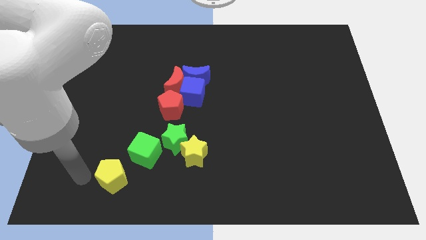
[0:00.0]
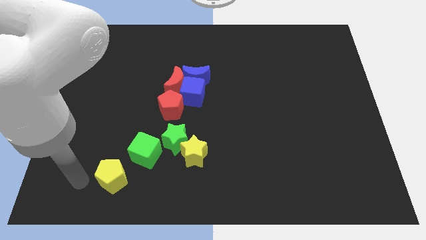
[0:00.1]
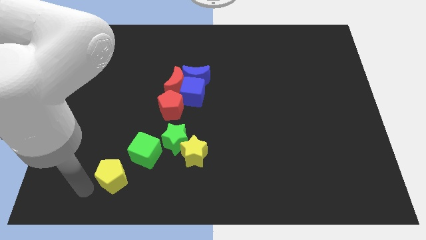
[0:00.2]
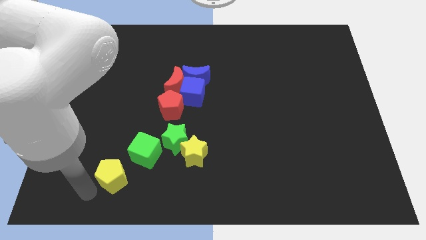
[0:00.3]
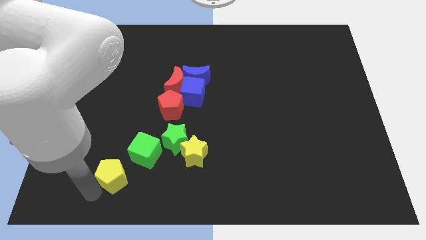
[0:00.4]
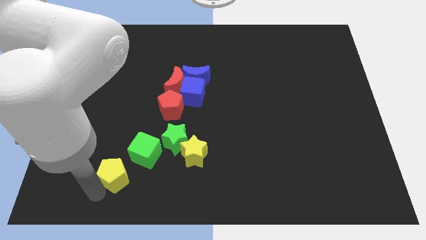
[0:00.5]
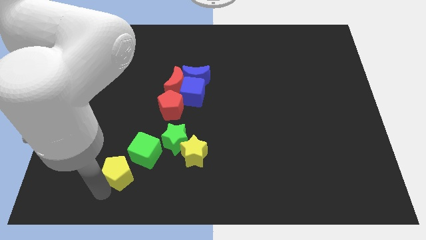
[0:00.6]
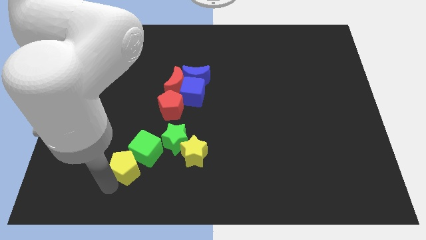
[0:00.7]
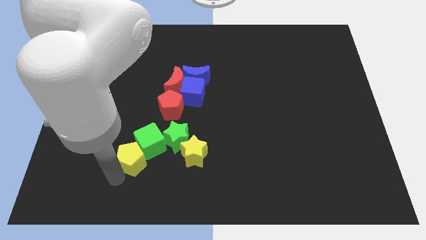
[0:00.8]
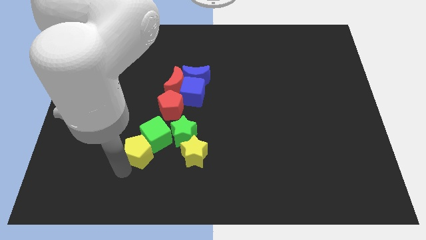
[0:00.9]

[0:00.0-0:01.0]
push the yellow pentagon to the left of the green cube

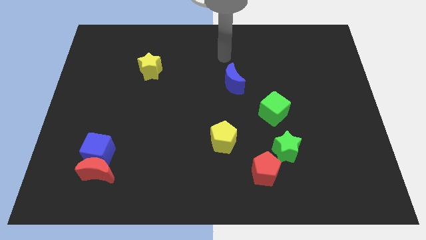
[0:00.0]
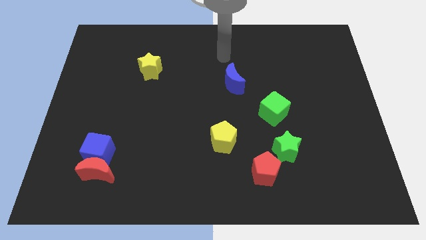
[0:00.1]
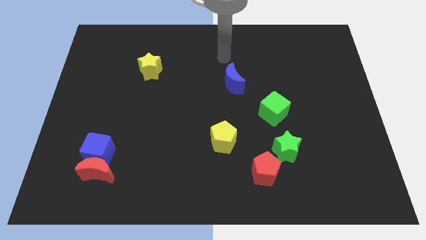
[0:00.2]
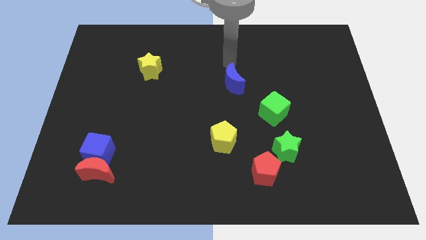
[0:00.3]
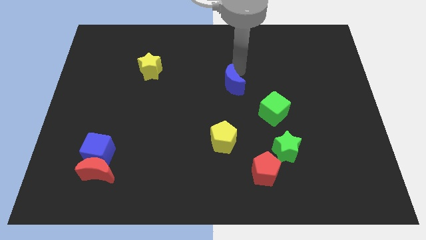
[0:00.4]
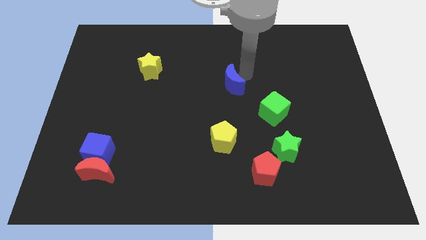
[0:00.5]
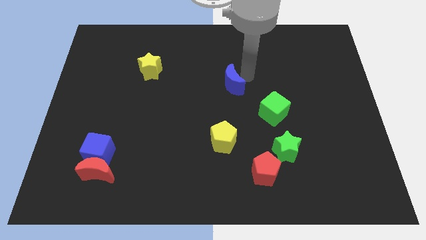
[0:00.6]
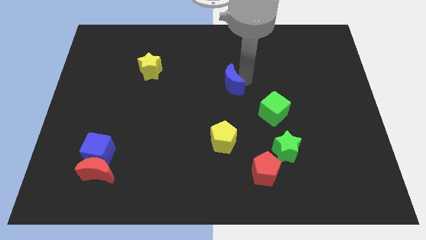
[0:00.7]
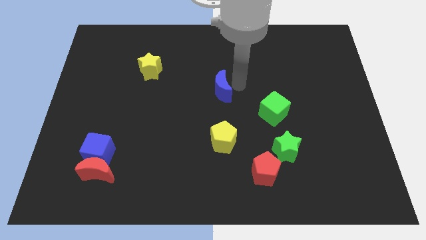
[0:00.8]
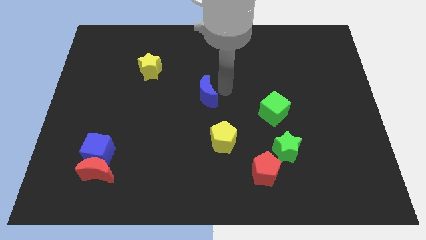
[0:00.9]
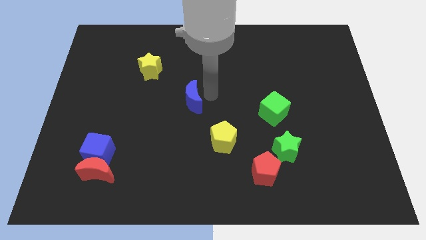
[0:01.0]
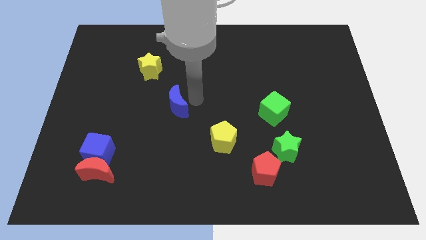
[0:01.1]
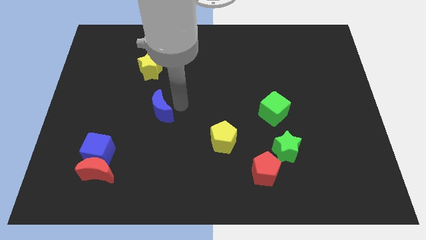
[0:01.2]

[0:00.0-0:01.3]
push the blue crescent in between the yellow star and yellow pentagon

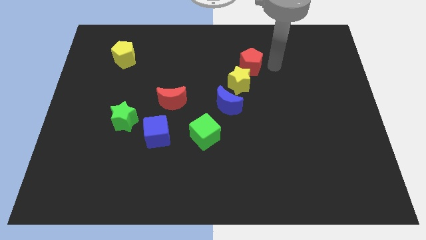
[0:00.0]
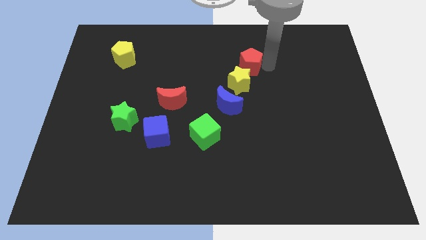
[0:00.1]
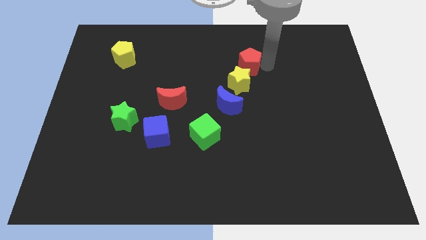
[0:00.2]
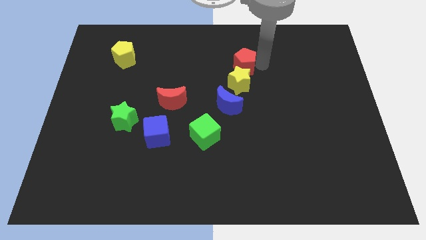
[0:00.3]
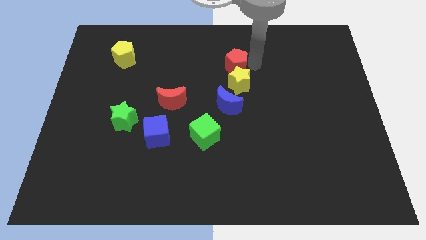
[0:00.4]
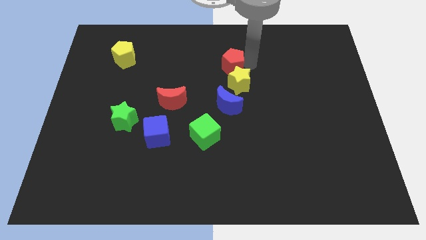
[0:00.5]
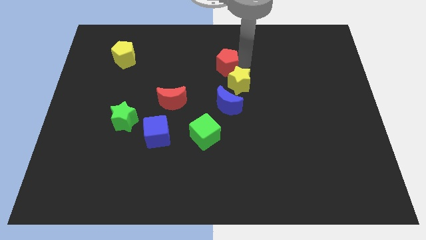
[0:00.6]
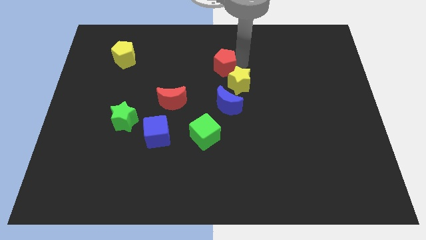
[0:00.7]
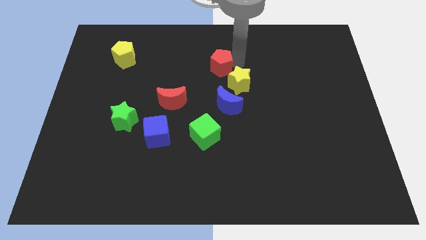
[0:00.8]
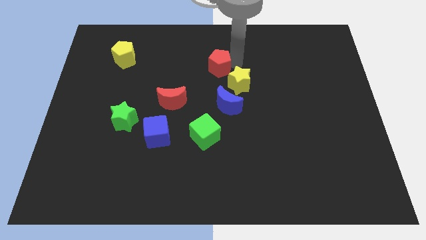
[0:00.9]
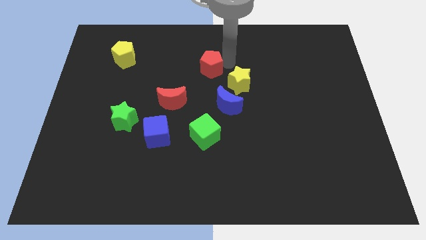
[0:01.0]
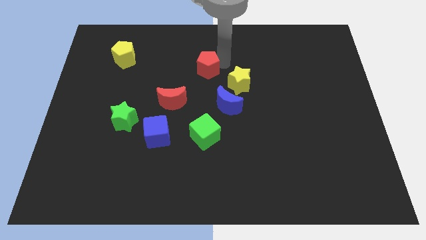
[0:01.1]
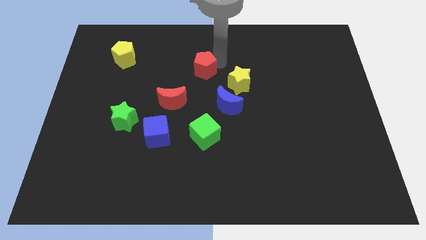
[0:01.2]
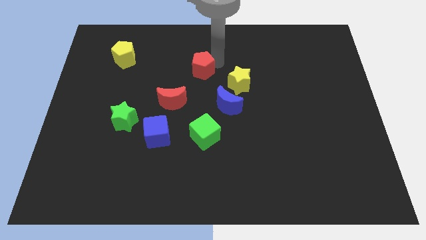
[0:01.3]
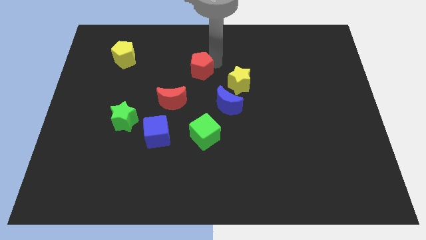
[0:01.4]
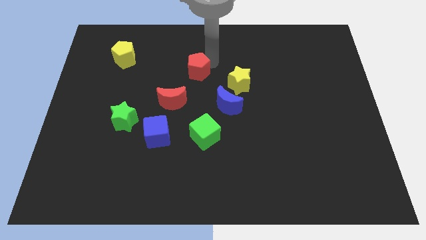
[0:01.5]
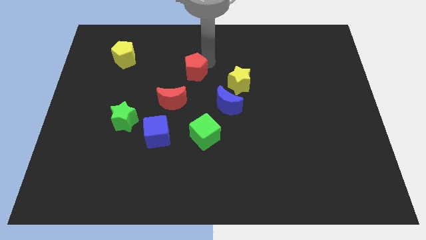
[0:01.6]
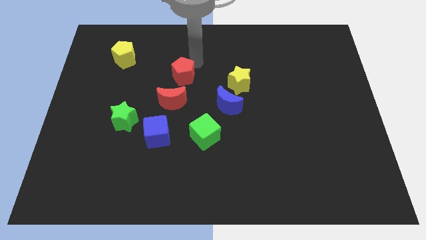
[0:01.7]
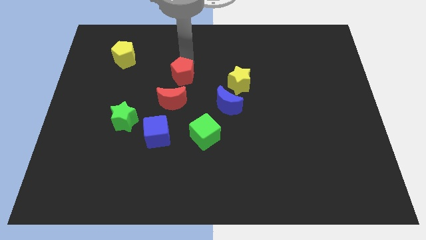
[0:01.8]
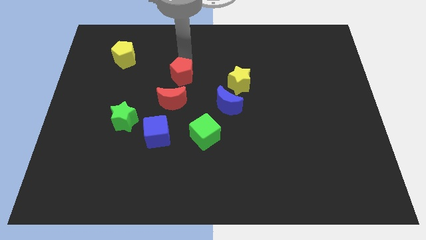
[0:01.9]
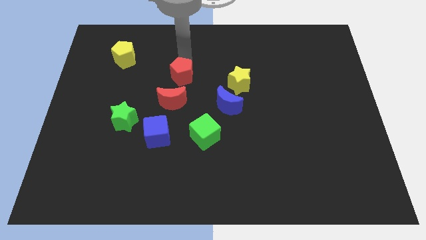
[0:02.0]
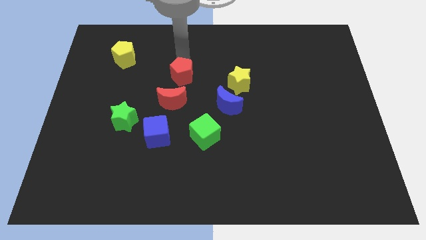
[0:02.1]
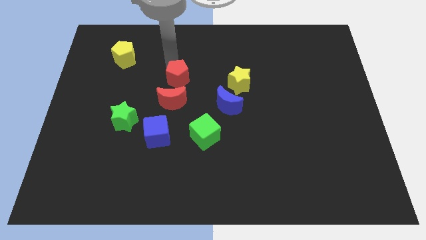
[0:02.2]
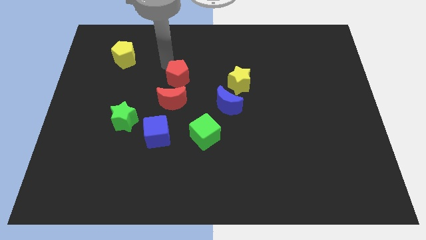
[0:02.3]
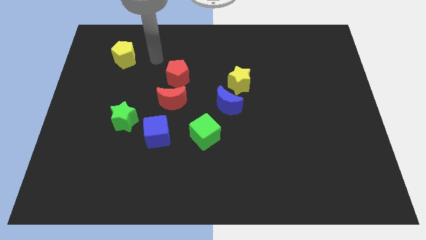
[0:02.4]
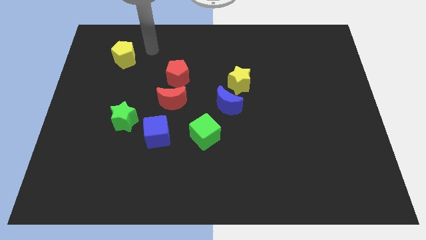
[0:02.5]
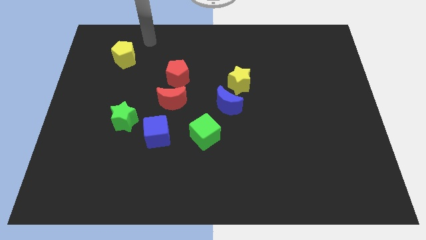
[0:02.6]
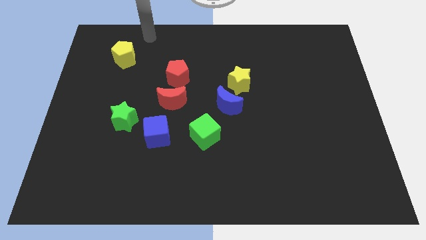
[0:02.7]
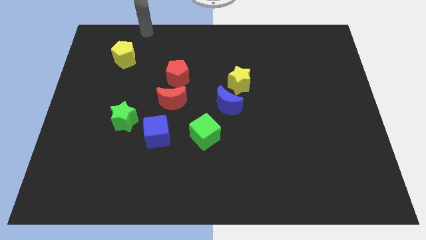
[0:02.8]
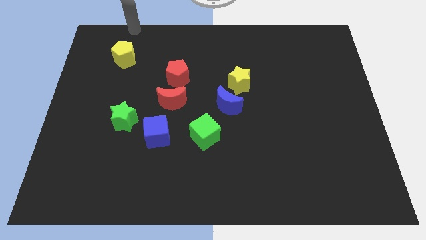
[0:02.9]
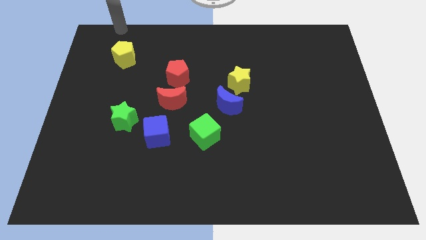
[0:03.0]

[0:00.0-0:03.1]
move the red pentagon above the red crescent

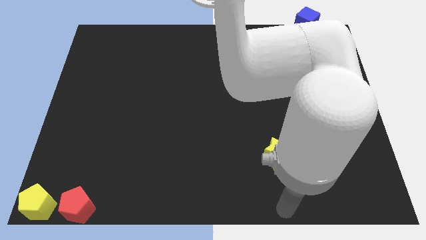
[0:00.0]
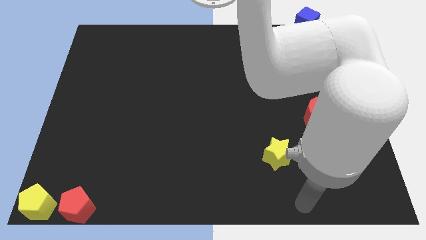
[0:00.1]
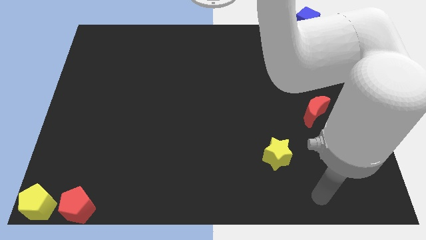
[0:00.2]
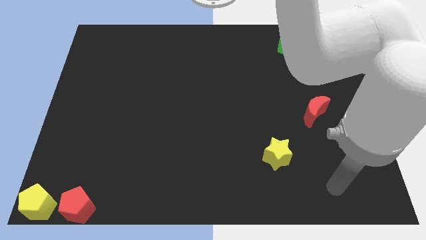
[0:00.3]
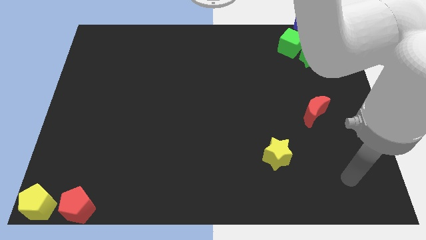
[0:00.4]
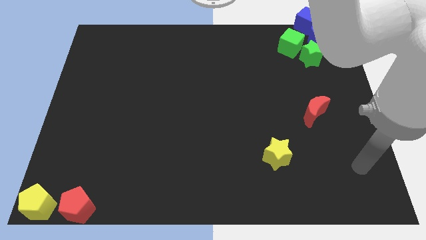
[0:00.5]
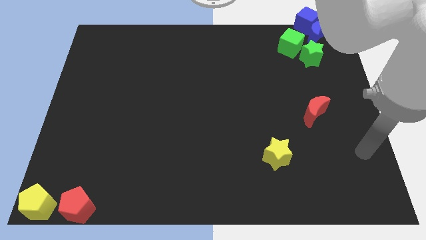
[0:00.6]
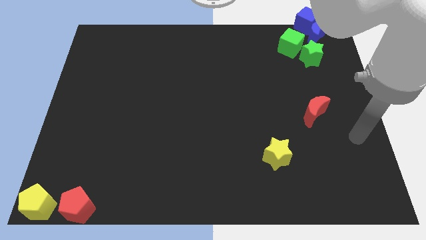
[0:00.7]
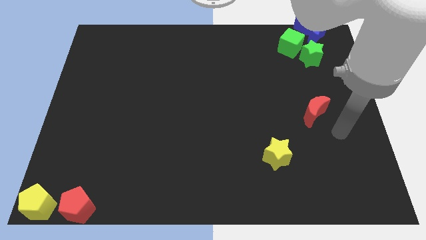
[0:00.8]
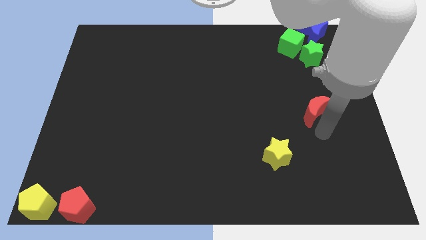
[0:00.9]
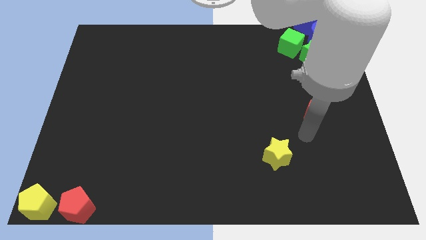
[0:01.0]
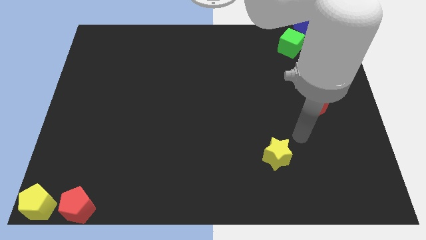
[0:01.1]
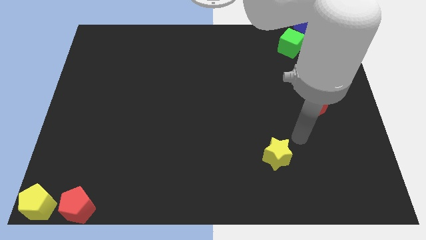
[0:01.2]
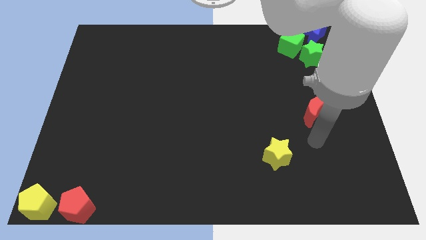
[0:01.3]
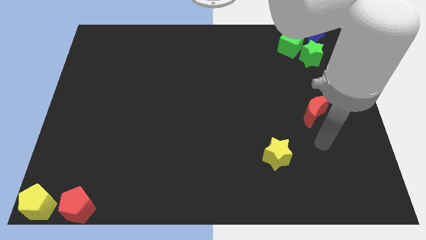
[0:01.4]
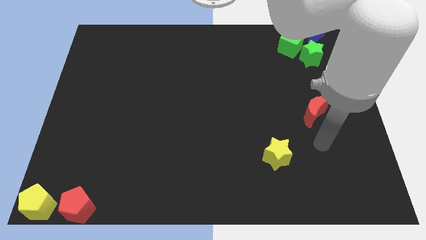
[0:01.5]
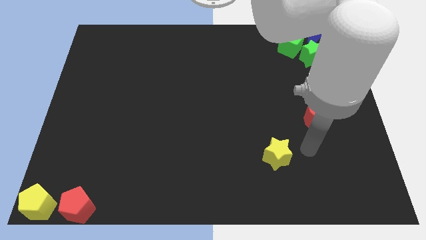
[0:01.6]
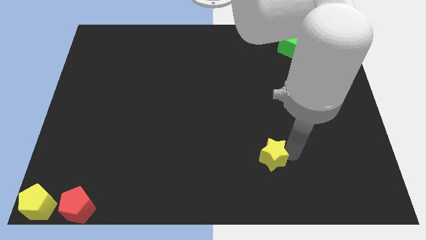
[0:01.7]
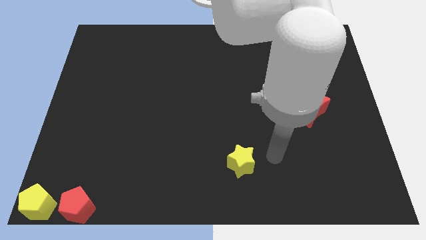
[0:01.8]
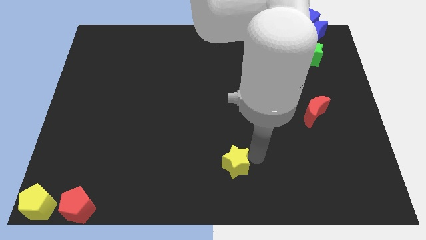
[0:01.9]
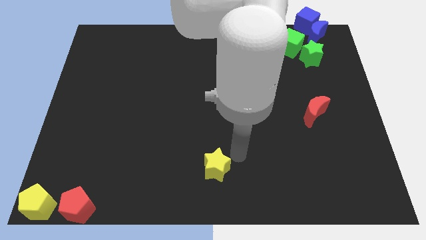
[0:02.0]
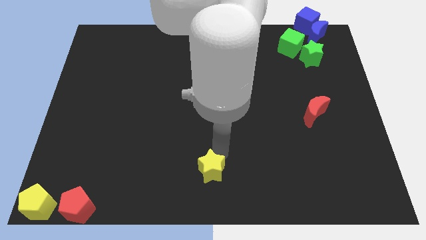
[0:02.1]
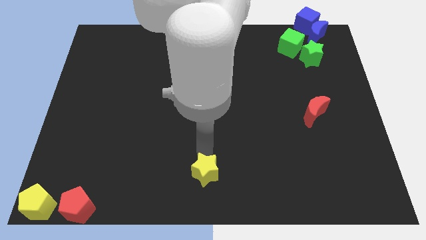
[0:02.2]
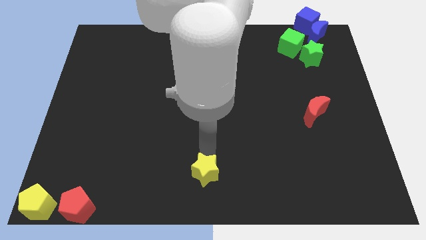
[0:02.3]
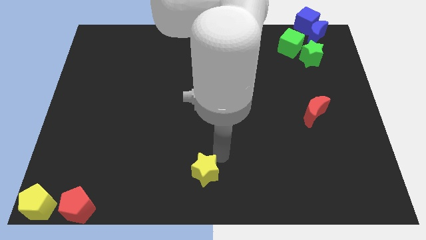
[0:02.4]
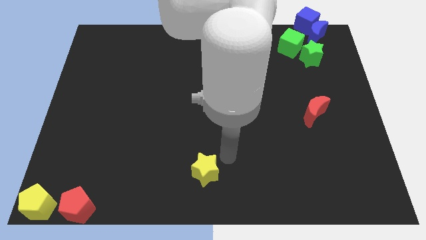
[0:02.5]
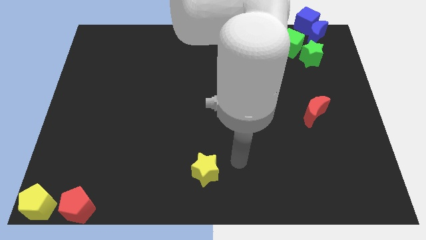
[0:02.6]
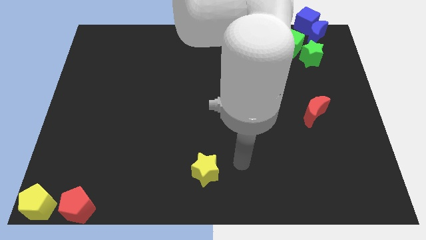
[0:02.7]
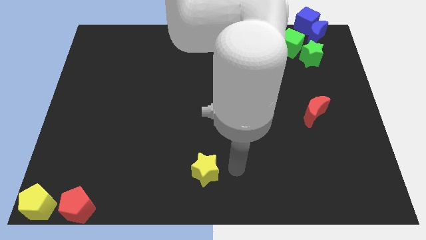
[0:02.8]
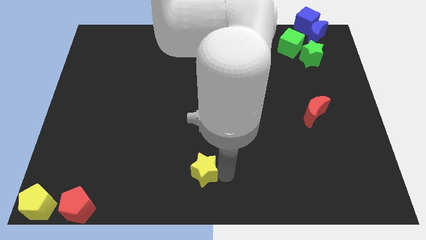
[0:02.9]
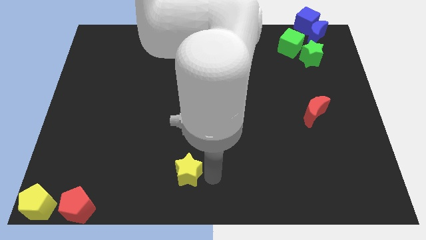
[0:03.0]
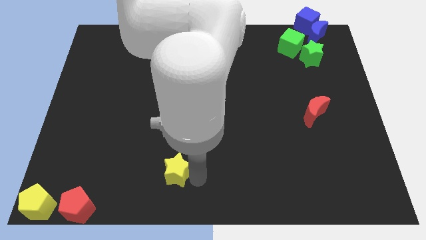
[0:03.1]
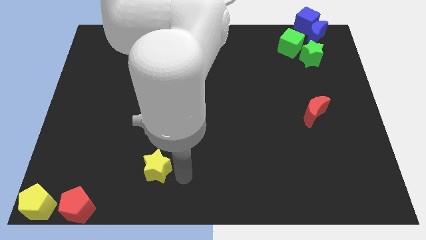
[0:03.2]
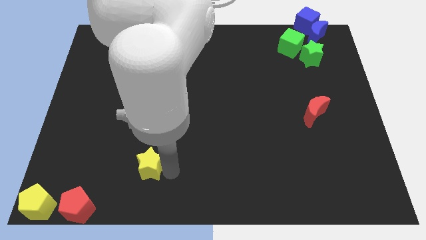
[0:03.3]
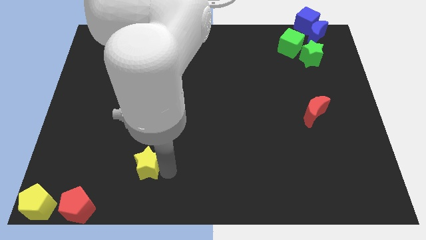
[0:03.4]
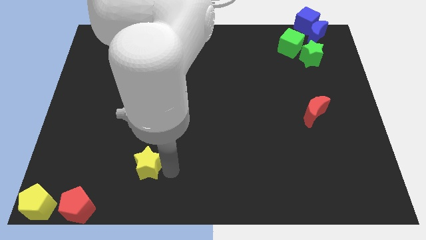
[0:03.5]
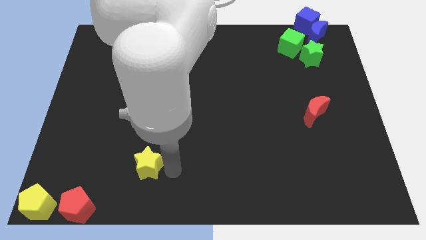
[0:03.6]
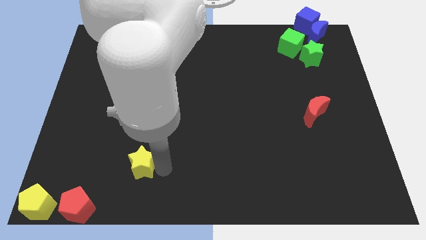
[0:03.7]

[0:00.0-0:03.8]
move the yellow star diagonally top right to red pentagon
